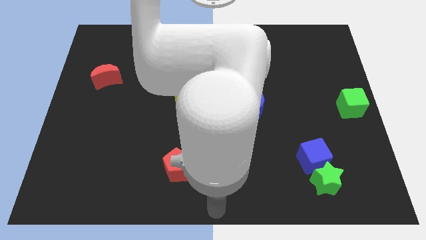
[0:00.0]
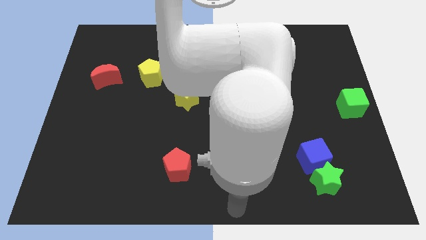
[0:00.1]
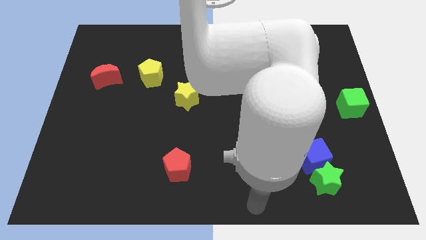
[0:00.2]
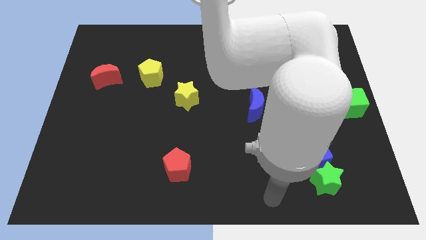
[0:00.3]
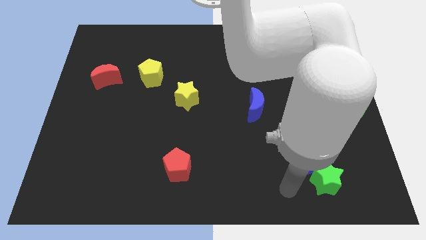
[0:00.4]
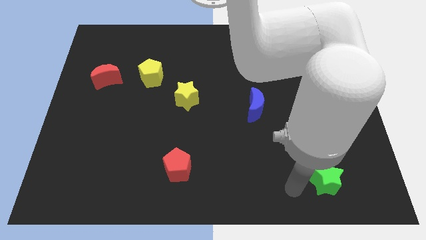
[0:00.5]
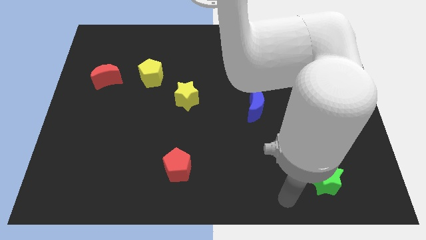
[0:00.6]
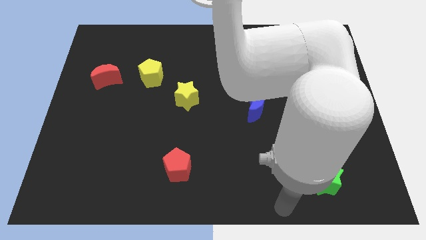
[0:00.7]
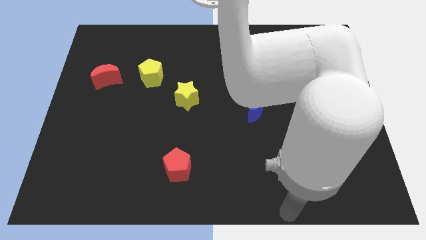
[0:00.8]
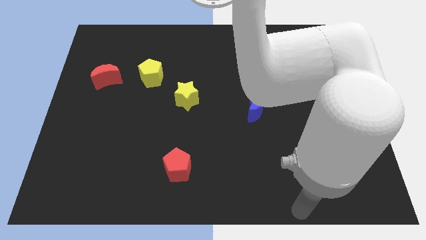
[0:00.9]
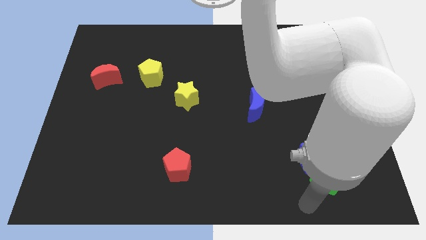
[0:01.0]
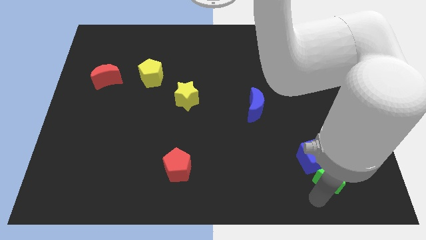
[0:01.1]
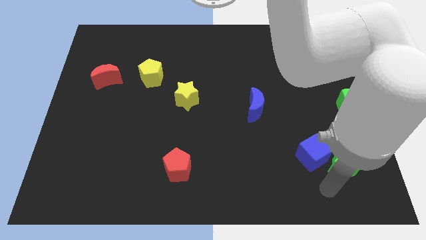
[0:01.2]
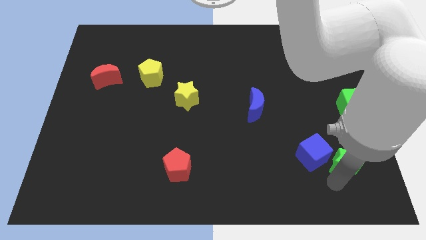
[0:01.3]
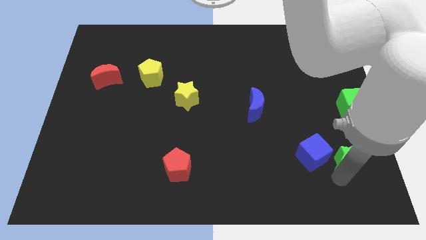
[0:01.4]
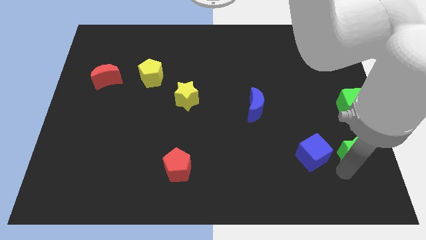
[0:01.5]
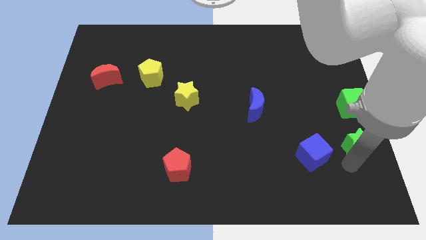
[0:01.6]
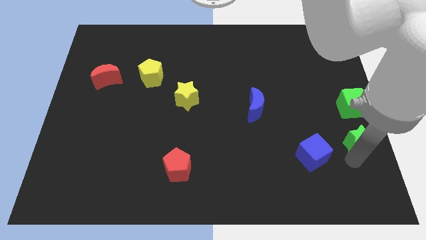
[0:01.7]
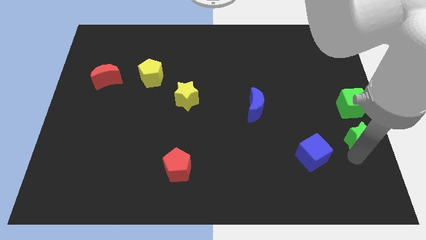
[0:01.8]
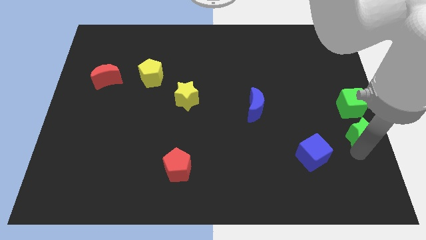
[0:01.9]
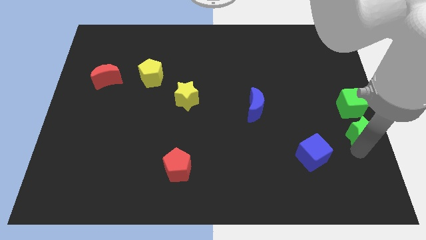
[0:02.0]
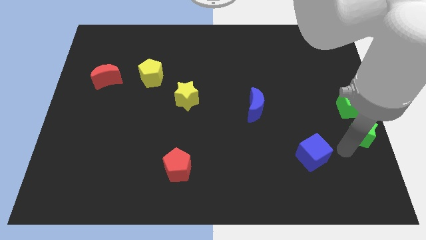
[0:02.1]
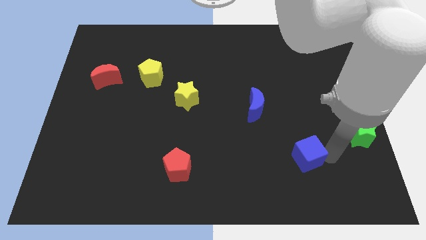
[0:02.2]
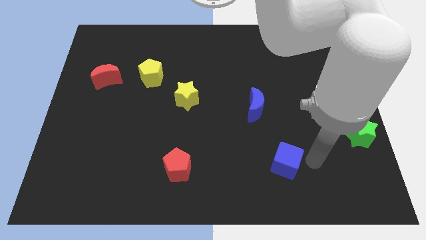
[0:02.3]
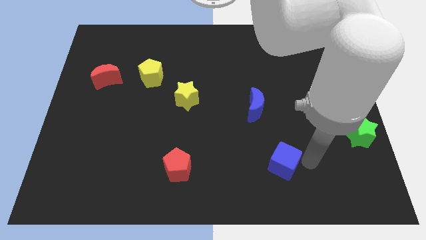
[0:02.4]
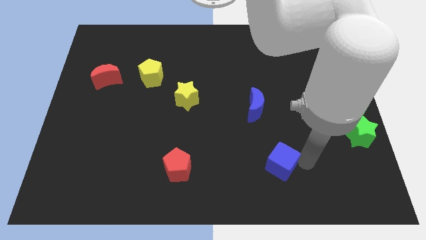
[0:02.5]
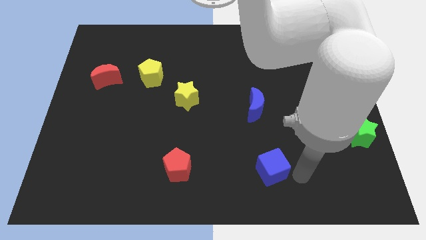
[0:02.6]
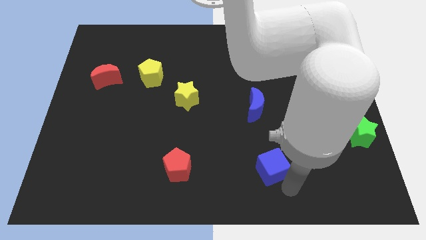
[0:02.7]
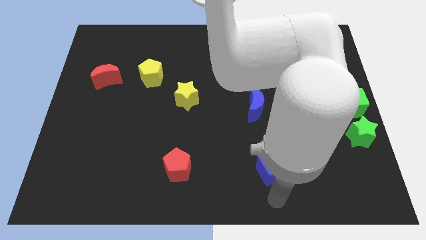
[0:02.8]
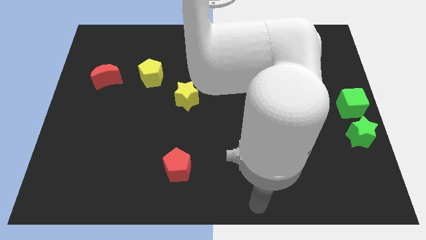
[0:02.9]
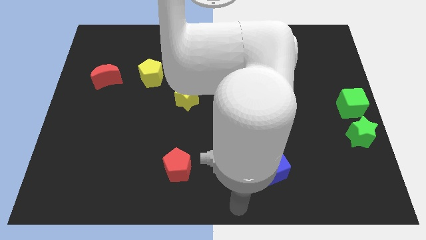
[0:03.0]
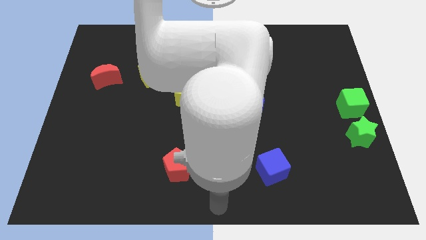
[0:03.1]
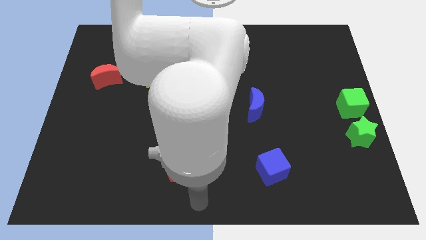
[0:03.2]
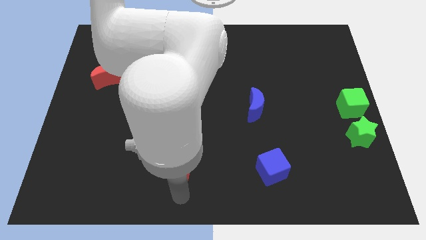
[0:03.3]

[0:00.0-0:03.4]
separate green star from blue cube

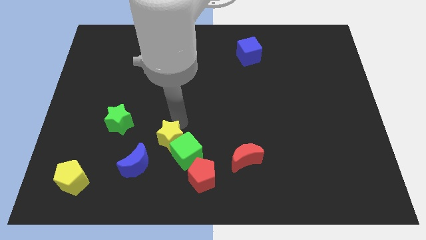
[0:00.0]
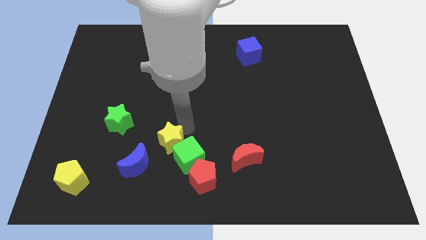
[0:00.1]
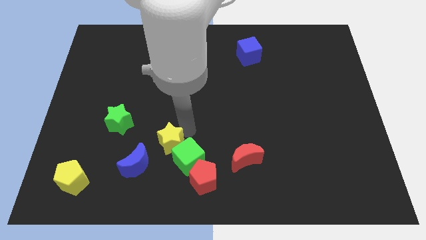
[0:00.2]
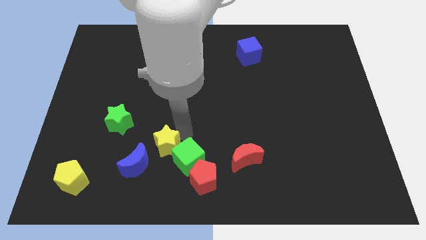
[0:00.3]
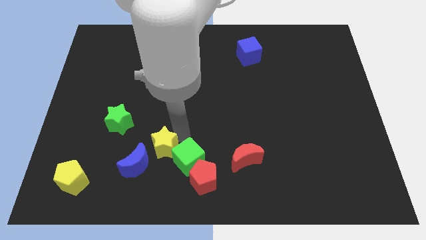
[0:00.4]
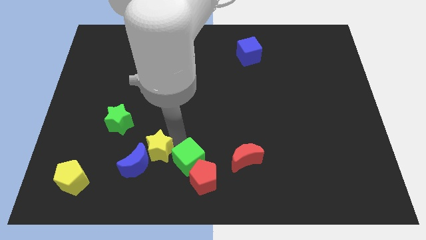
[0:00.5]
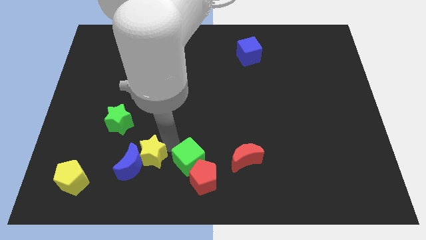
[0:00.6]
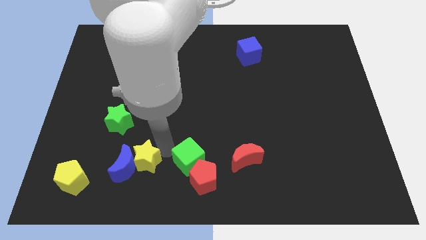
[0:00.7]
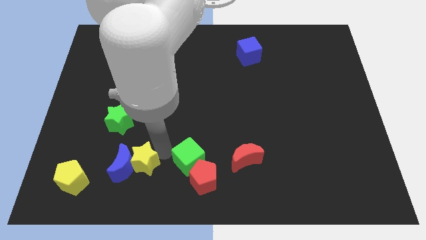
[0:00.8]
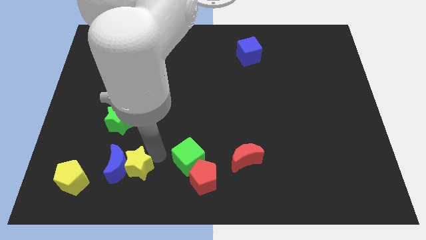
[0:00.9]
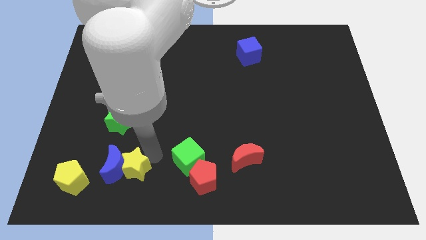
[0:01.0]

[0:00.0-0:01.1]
push the yellow star into the right side of the blue crescent

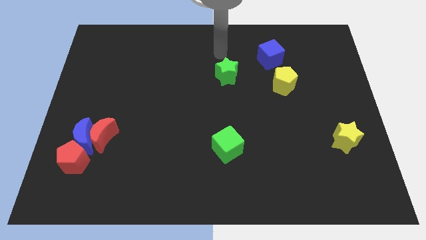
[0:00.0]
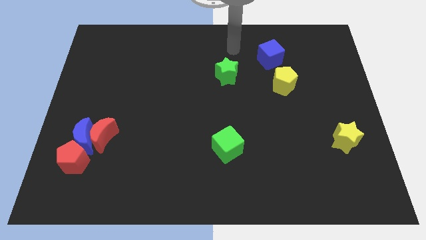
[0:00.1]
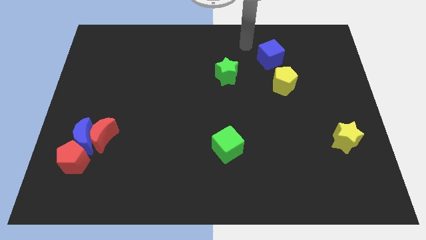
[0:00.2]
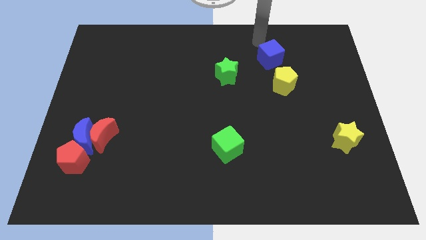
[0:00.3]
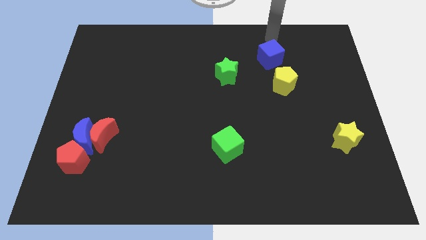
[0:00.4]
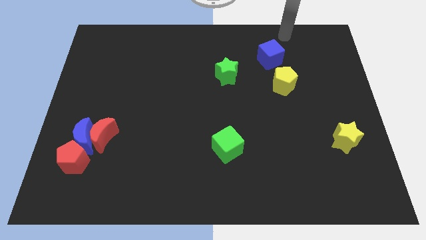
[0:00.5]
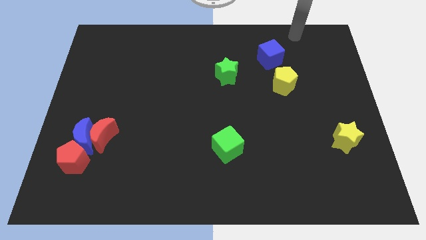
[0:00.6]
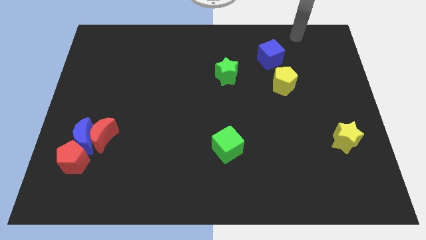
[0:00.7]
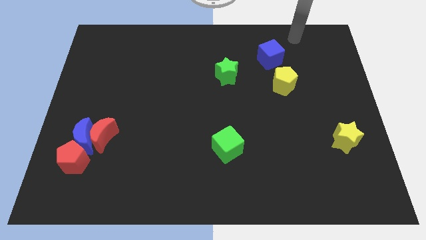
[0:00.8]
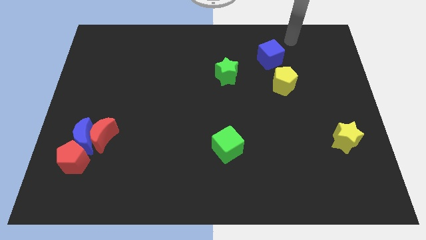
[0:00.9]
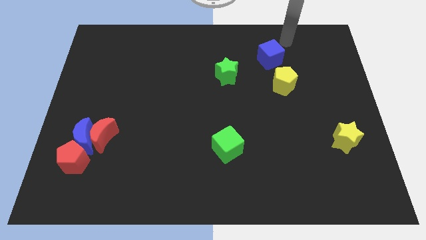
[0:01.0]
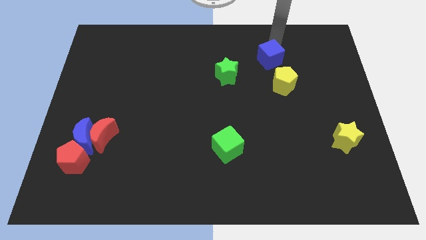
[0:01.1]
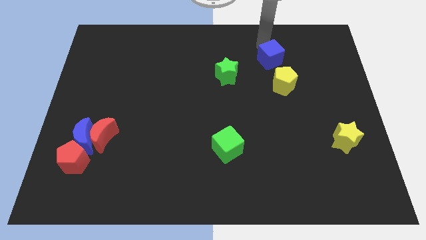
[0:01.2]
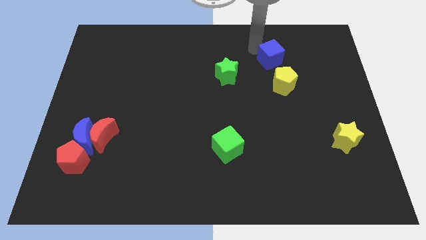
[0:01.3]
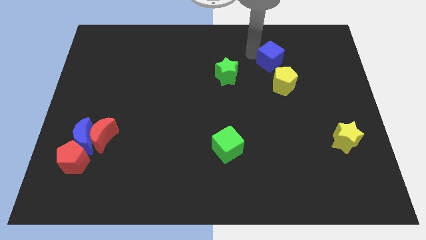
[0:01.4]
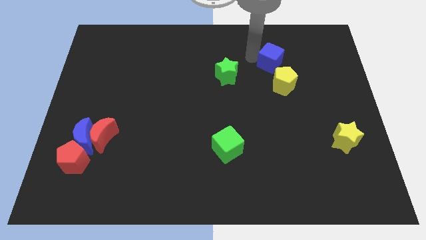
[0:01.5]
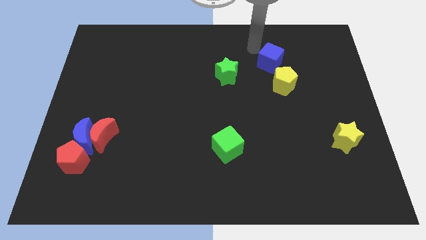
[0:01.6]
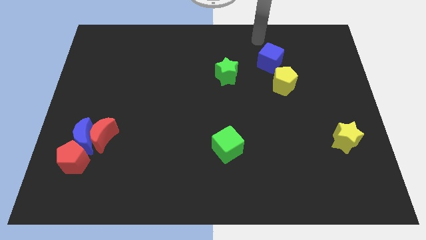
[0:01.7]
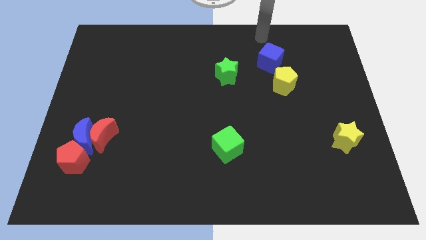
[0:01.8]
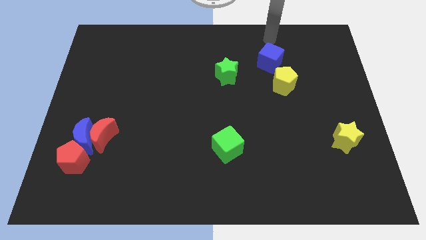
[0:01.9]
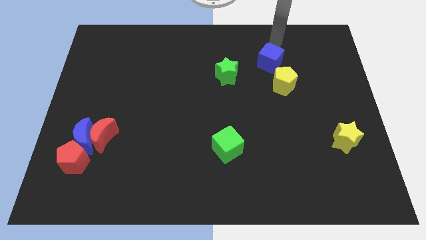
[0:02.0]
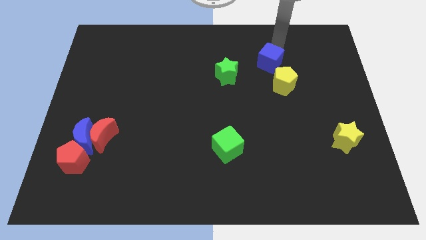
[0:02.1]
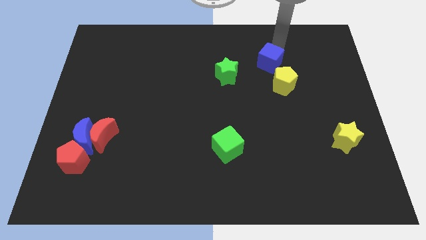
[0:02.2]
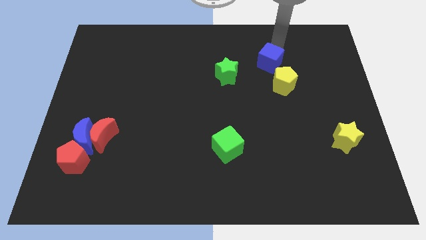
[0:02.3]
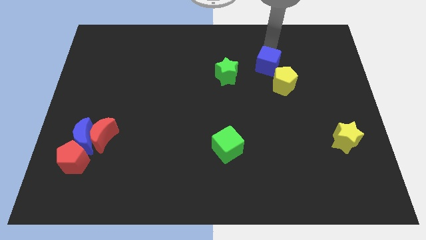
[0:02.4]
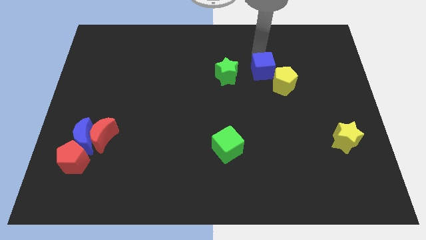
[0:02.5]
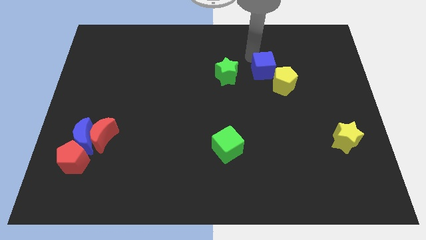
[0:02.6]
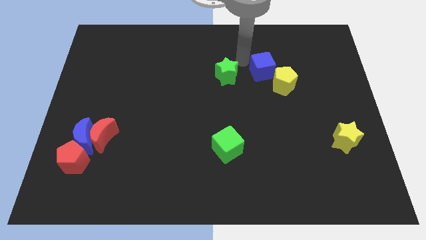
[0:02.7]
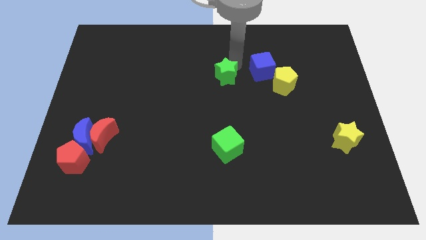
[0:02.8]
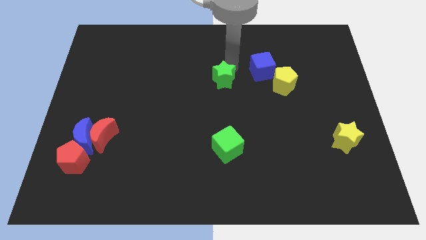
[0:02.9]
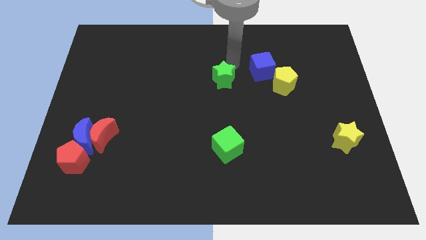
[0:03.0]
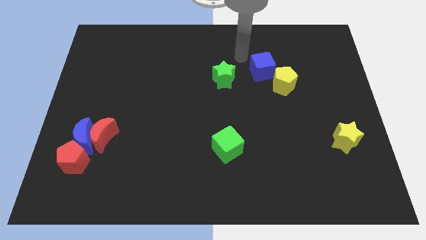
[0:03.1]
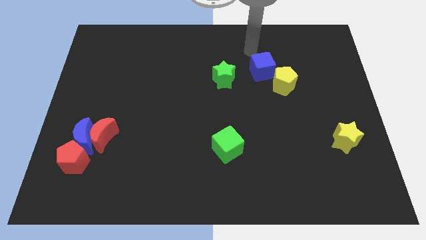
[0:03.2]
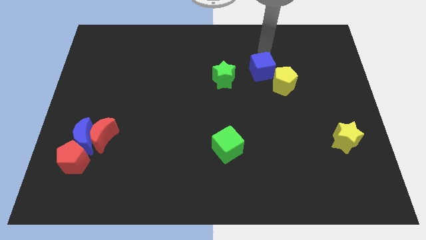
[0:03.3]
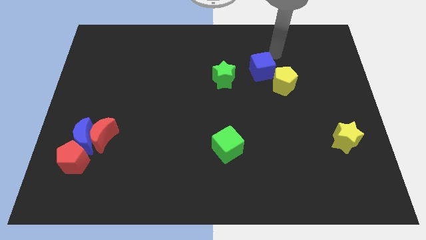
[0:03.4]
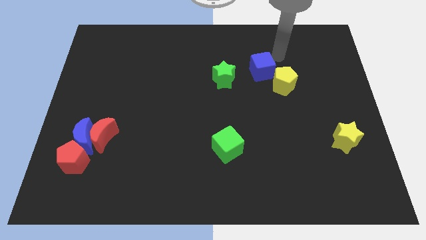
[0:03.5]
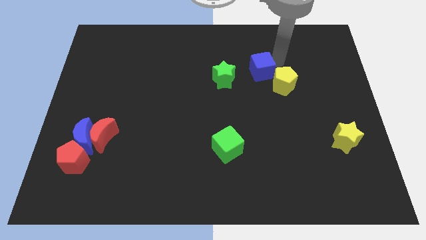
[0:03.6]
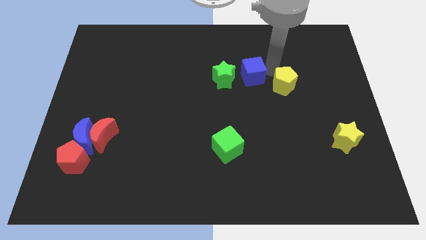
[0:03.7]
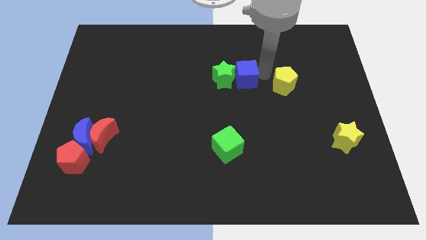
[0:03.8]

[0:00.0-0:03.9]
place the blue cube in between the yellow pentagon and green star

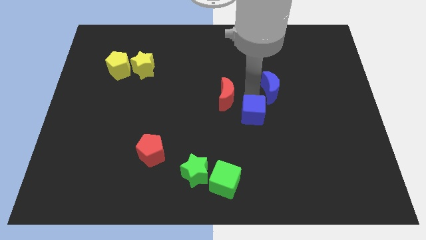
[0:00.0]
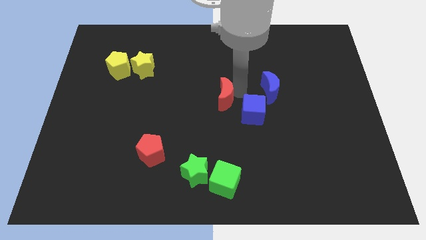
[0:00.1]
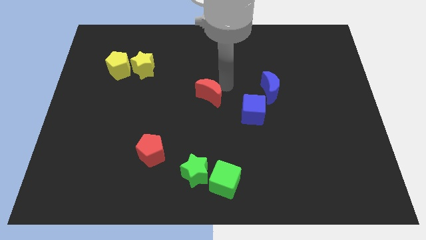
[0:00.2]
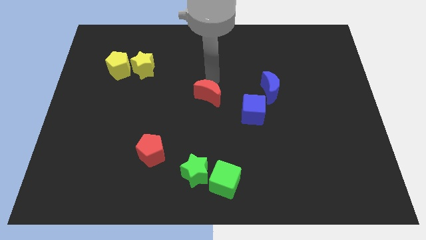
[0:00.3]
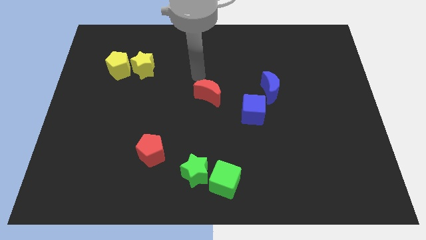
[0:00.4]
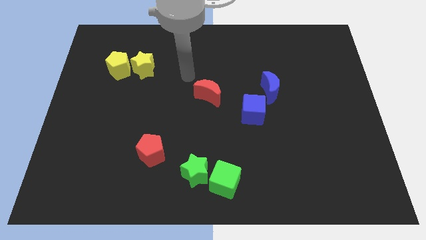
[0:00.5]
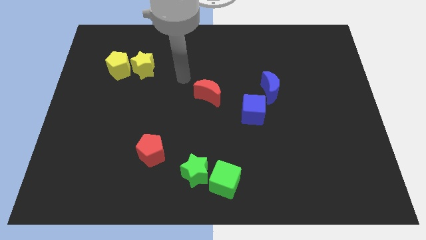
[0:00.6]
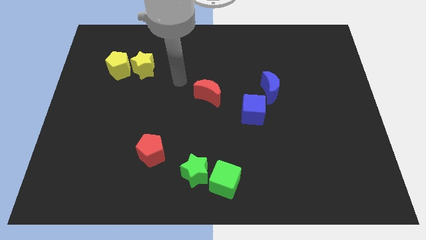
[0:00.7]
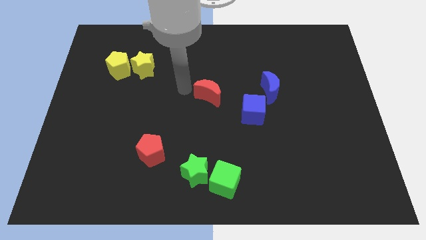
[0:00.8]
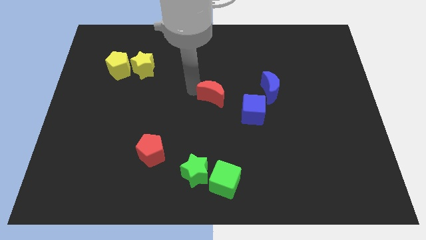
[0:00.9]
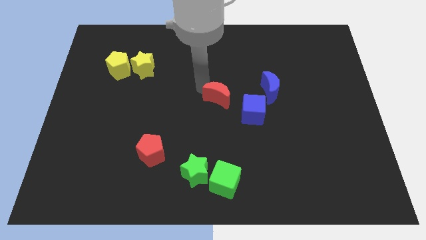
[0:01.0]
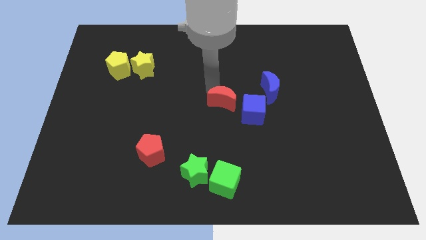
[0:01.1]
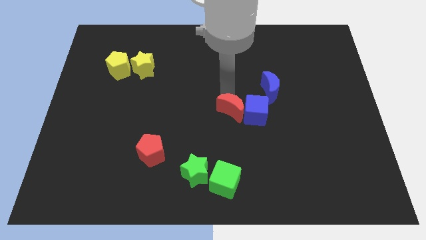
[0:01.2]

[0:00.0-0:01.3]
place the red moon to the left of the blue cube
